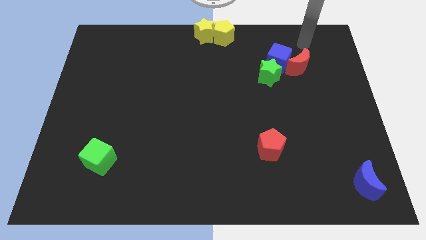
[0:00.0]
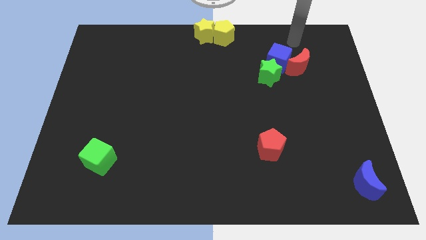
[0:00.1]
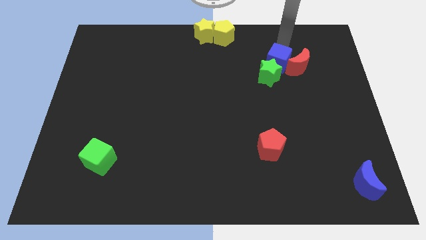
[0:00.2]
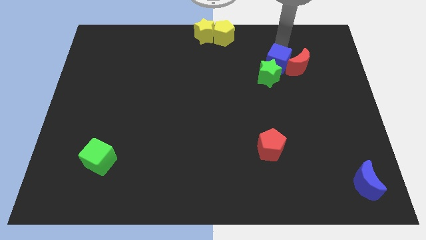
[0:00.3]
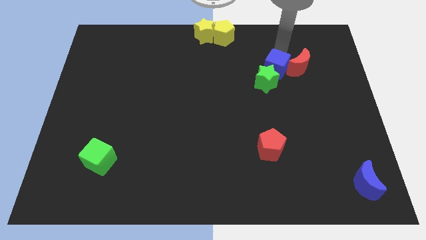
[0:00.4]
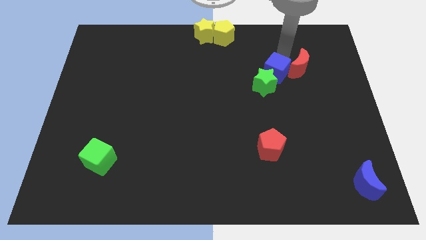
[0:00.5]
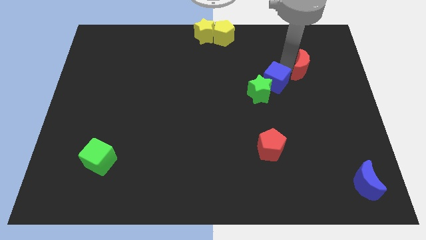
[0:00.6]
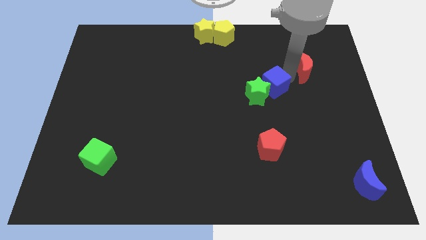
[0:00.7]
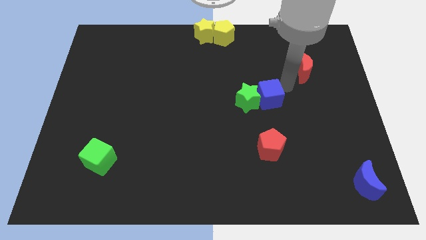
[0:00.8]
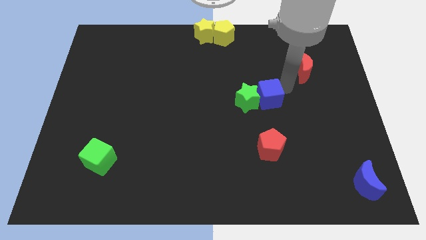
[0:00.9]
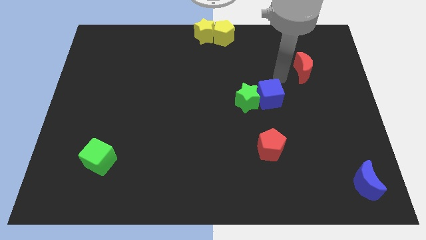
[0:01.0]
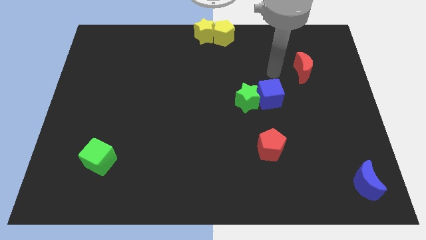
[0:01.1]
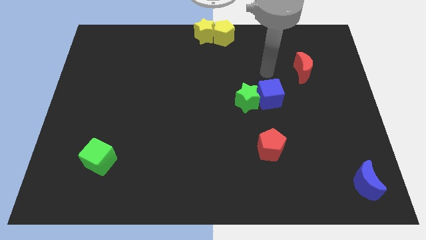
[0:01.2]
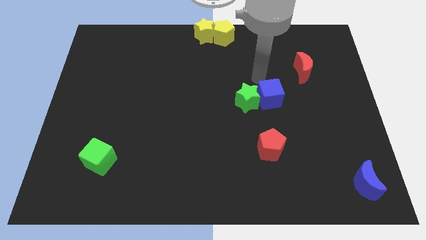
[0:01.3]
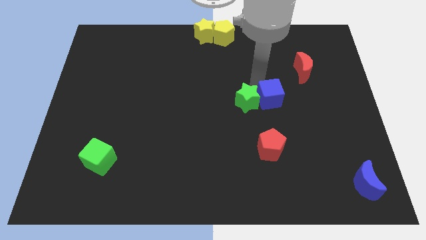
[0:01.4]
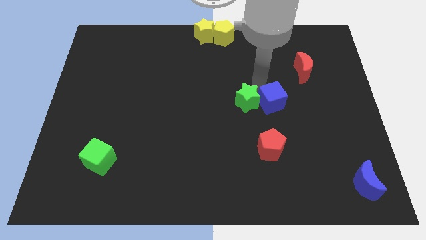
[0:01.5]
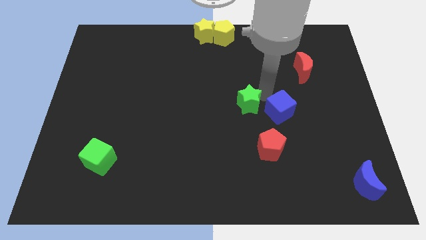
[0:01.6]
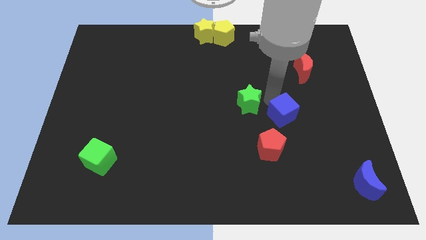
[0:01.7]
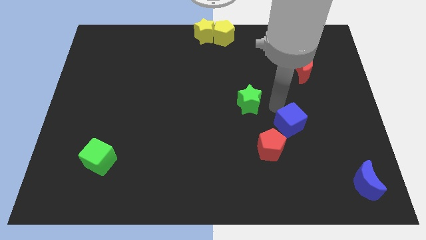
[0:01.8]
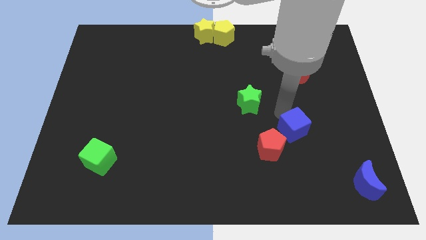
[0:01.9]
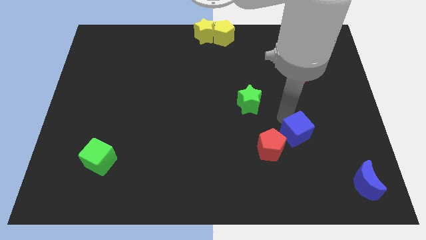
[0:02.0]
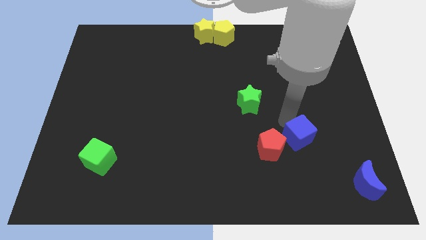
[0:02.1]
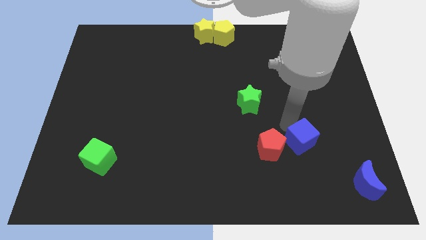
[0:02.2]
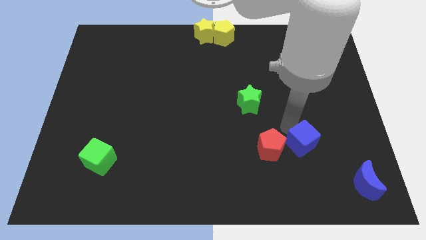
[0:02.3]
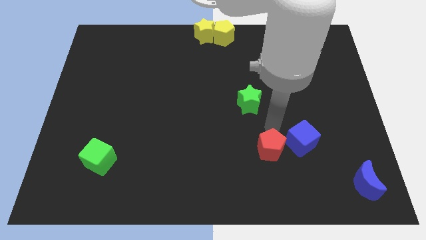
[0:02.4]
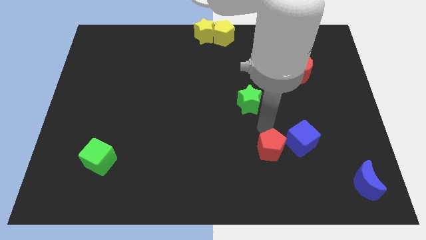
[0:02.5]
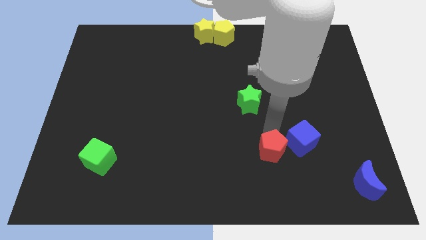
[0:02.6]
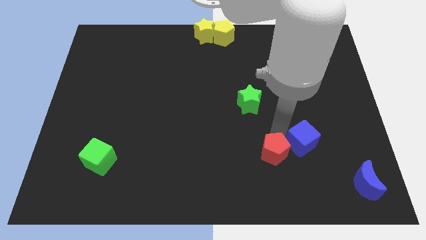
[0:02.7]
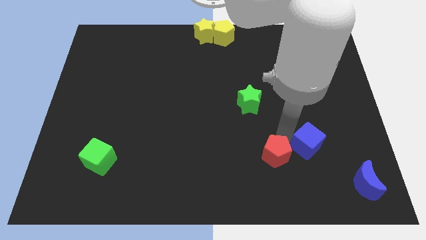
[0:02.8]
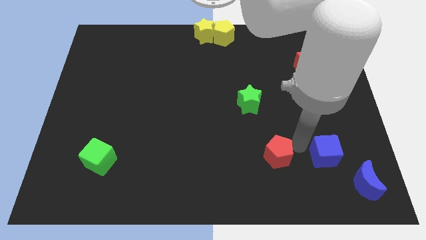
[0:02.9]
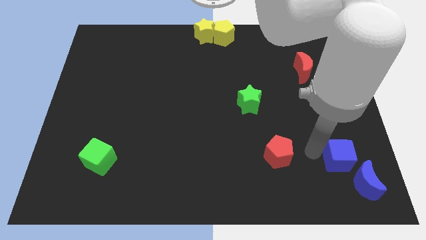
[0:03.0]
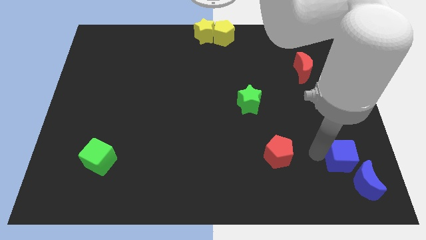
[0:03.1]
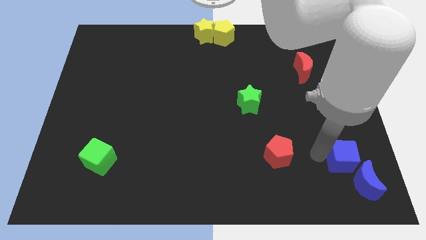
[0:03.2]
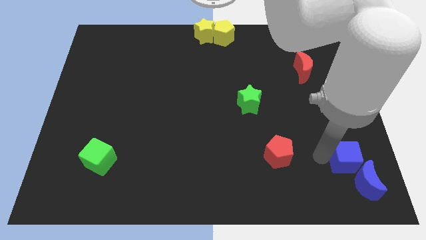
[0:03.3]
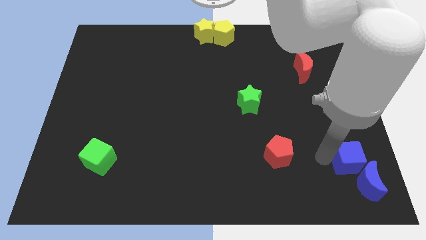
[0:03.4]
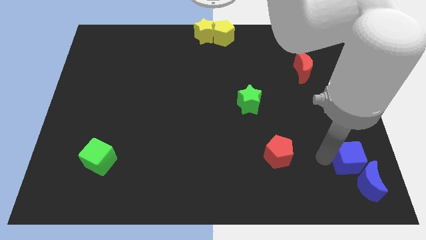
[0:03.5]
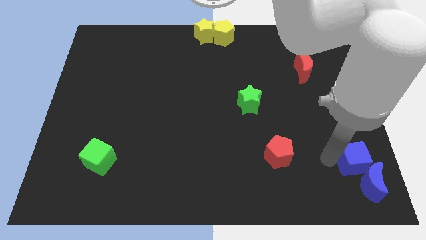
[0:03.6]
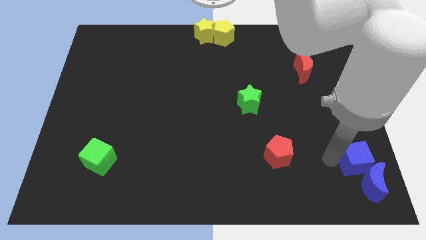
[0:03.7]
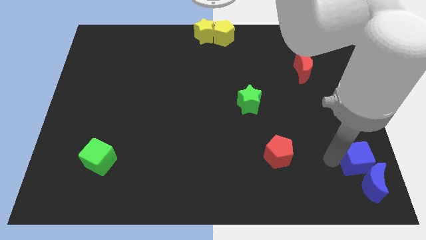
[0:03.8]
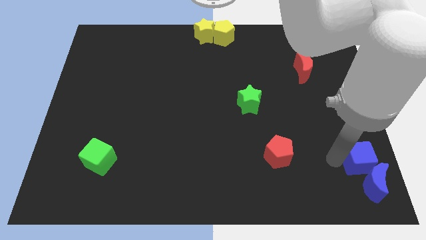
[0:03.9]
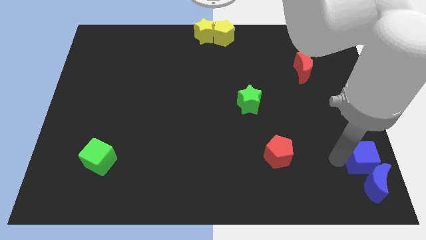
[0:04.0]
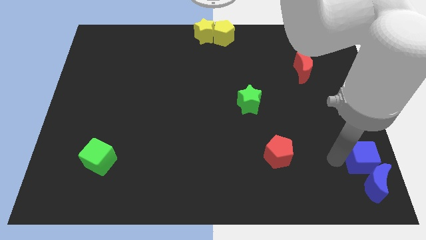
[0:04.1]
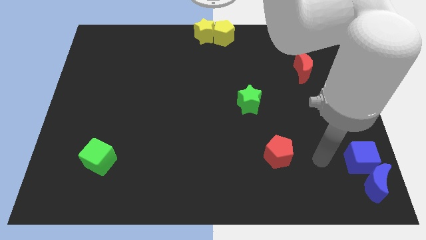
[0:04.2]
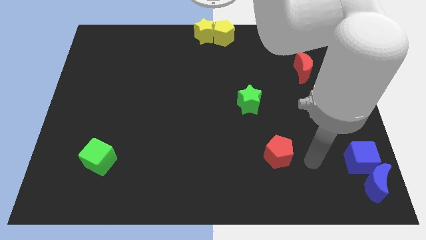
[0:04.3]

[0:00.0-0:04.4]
separate blue cube from red moon

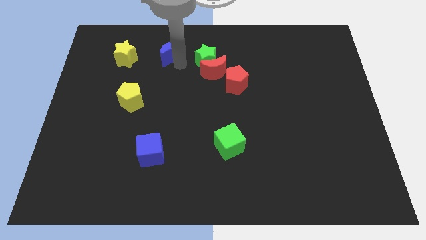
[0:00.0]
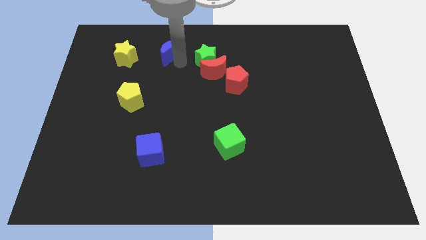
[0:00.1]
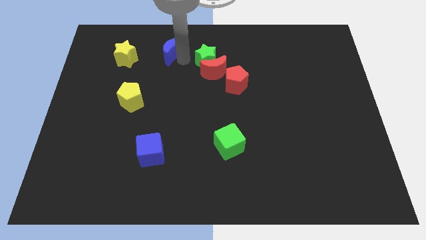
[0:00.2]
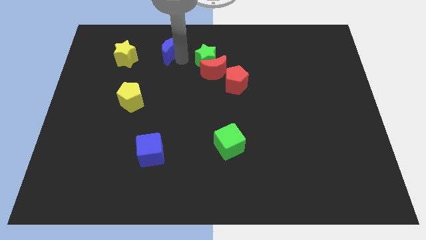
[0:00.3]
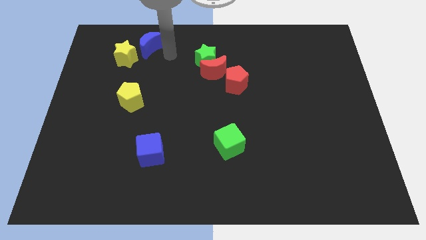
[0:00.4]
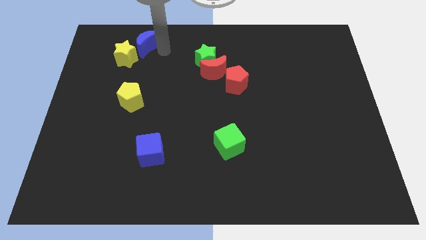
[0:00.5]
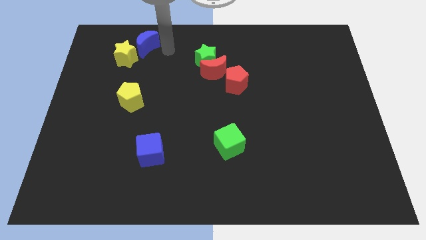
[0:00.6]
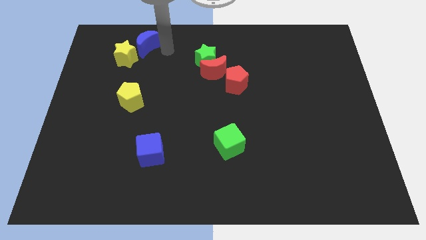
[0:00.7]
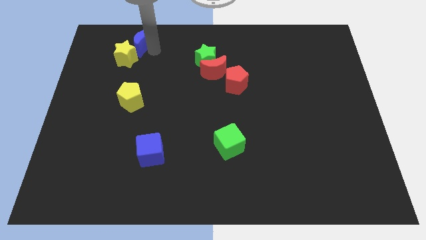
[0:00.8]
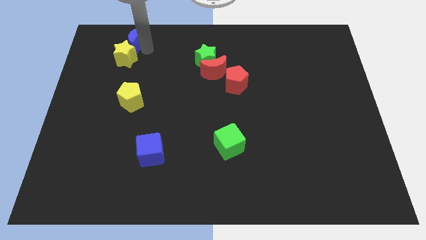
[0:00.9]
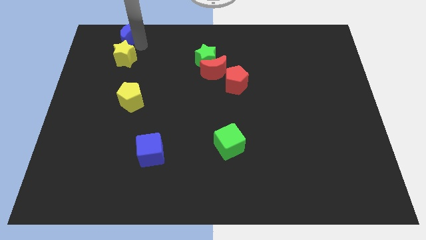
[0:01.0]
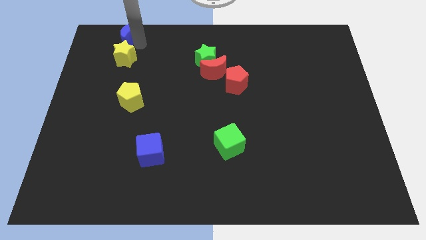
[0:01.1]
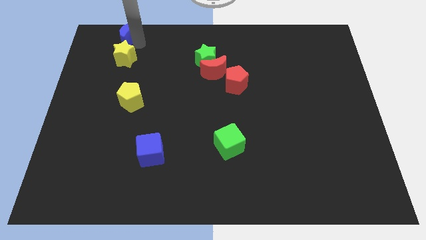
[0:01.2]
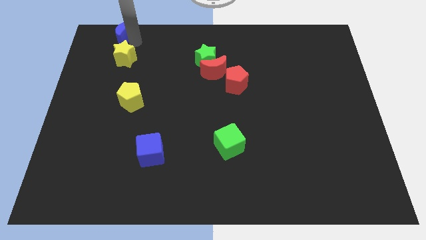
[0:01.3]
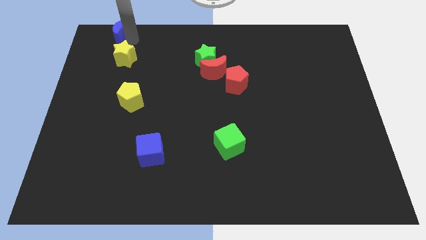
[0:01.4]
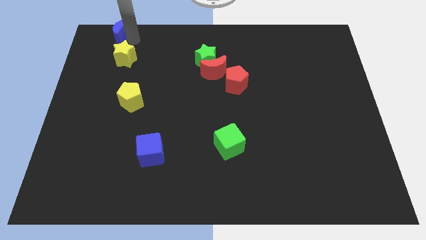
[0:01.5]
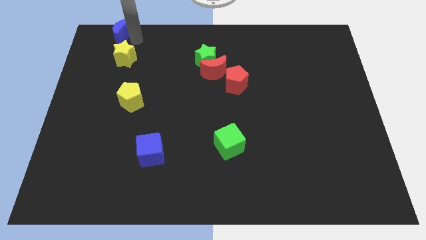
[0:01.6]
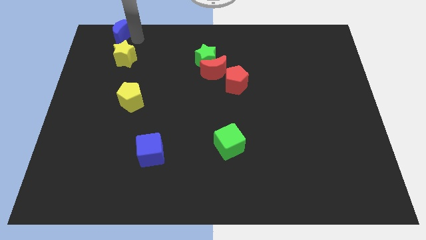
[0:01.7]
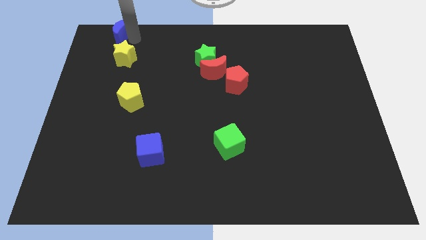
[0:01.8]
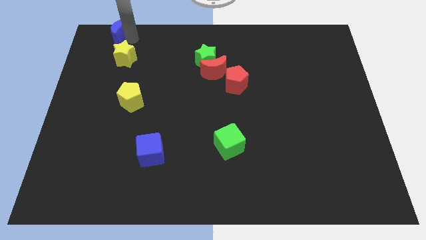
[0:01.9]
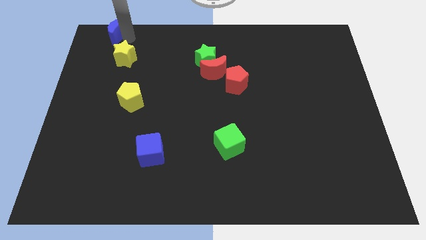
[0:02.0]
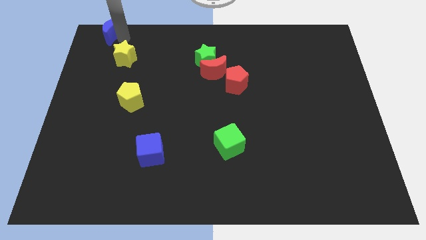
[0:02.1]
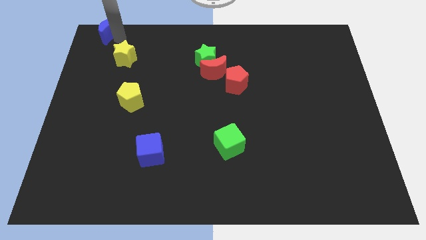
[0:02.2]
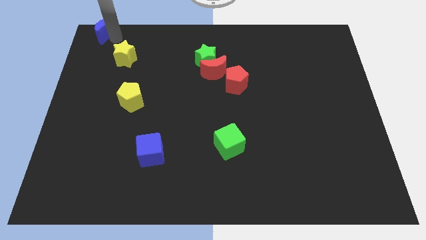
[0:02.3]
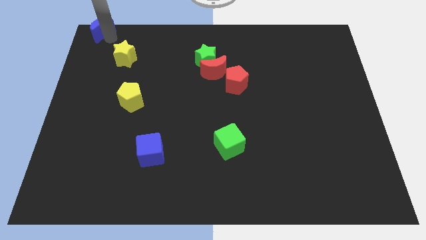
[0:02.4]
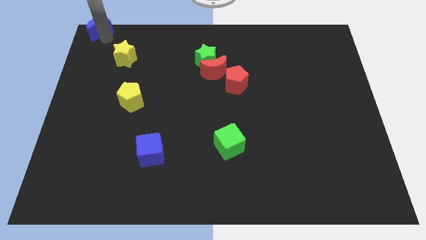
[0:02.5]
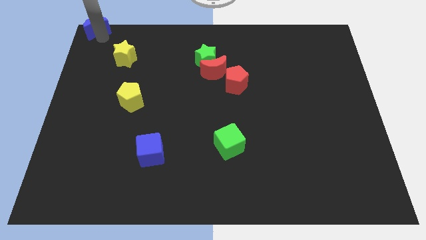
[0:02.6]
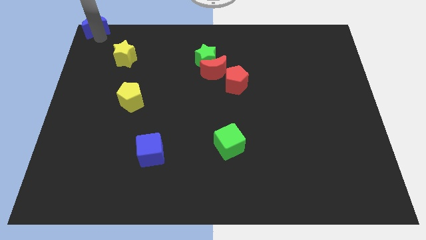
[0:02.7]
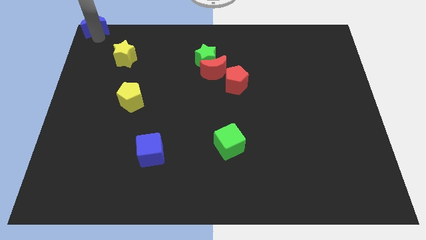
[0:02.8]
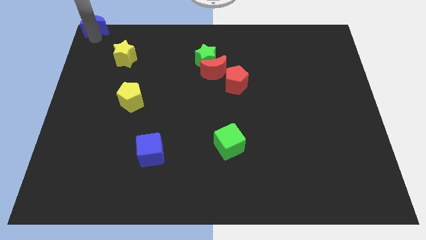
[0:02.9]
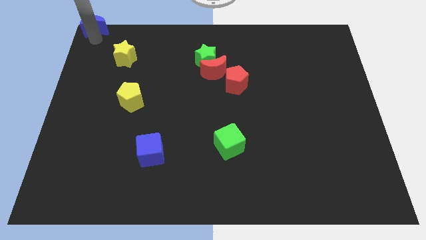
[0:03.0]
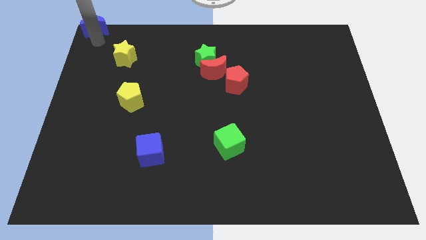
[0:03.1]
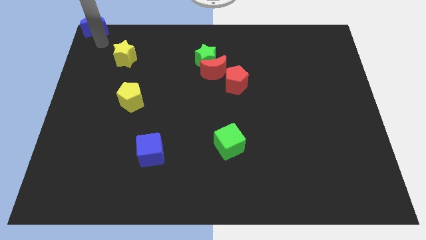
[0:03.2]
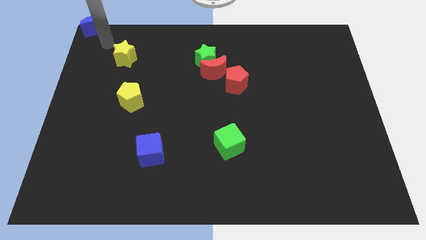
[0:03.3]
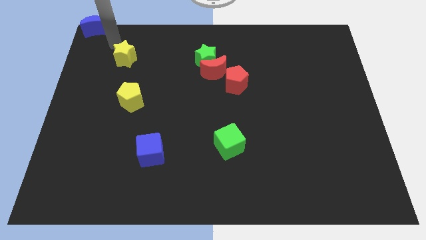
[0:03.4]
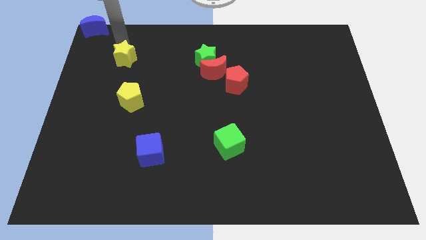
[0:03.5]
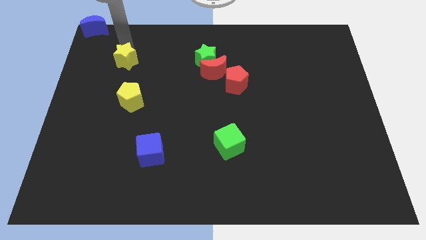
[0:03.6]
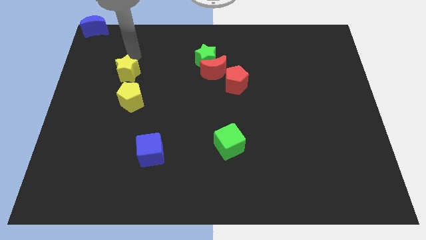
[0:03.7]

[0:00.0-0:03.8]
place the blue moon at the top left corner of the board

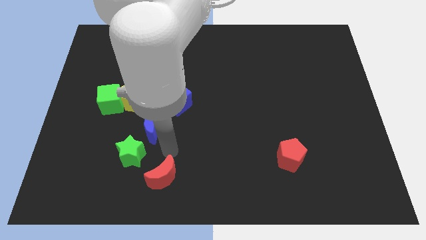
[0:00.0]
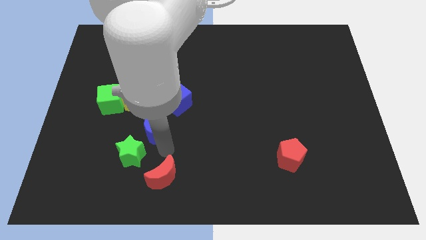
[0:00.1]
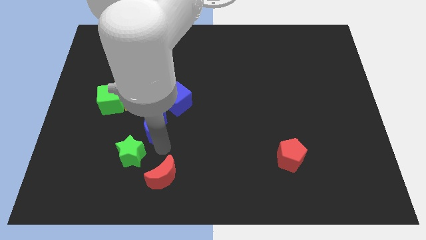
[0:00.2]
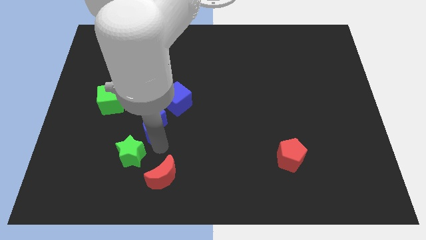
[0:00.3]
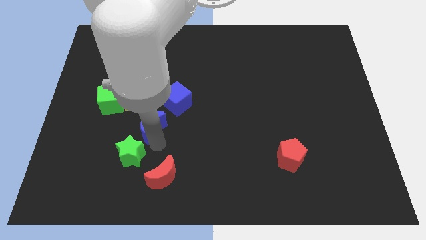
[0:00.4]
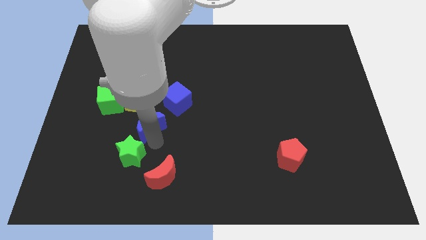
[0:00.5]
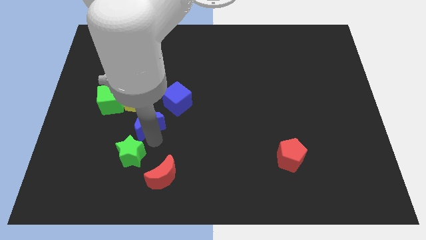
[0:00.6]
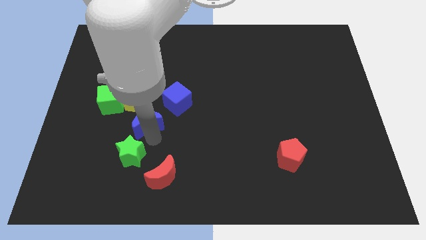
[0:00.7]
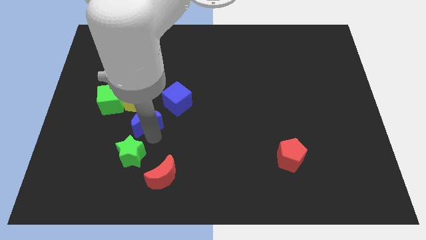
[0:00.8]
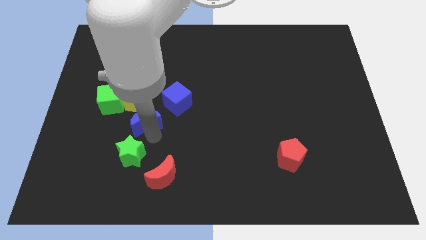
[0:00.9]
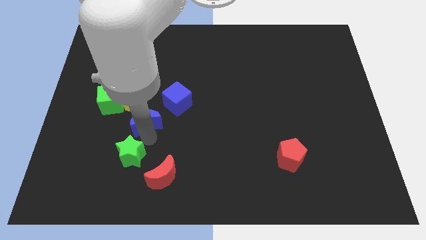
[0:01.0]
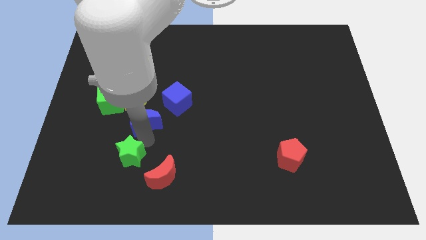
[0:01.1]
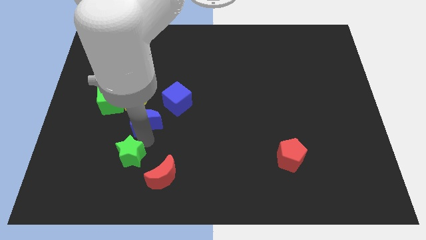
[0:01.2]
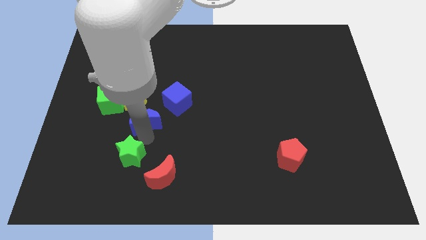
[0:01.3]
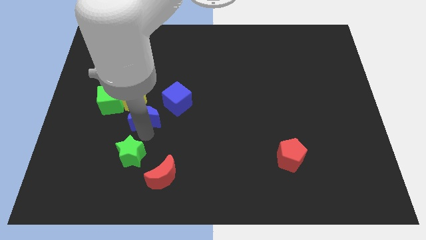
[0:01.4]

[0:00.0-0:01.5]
slide the blue moon above the green star
